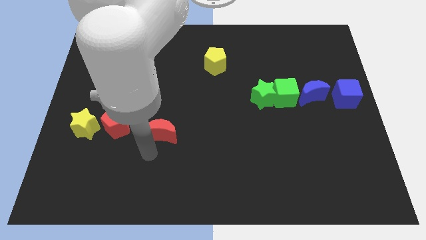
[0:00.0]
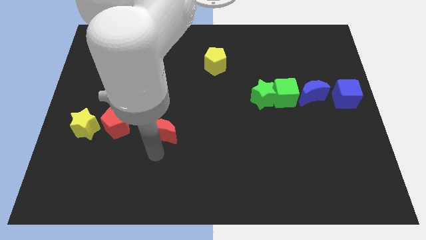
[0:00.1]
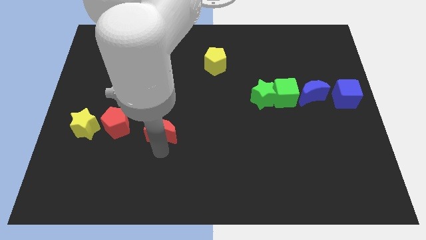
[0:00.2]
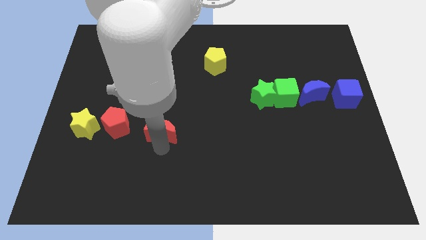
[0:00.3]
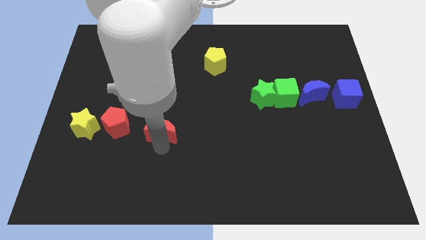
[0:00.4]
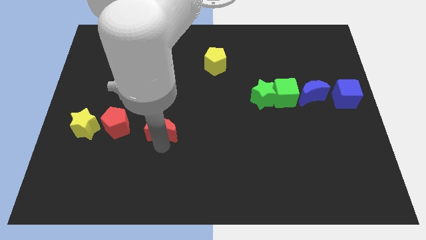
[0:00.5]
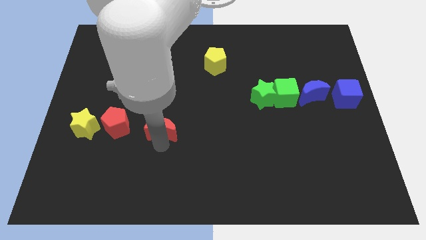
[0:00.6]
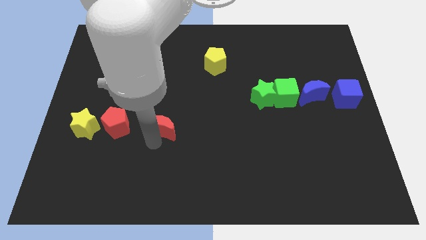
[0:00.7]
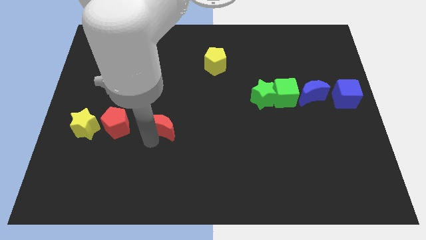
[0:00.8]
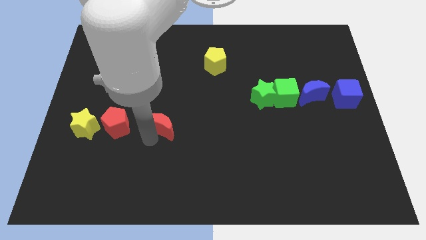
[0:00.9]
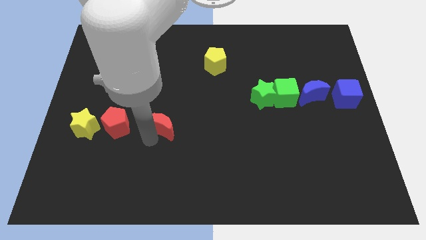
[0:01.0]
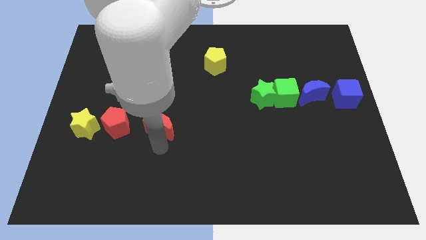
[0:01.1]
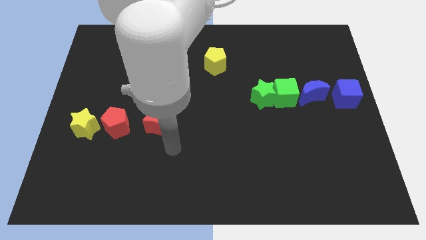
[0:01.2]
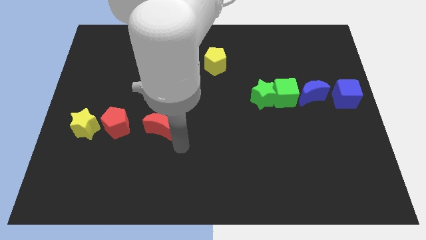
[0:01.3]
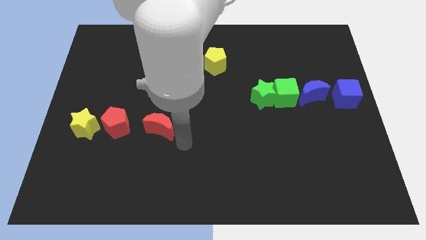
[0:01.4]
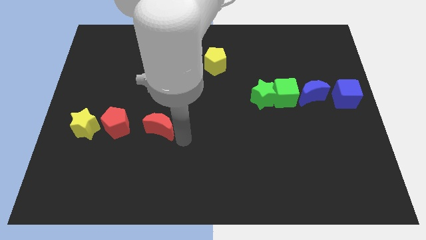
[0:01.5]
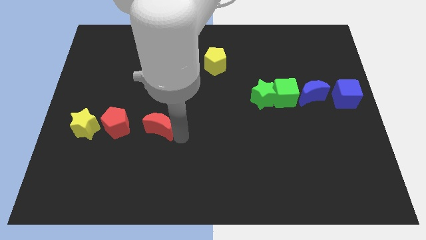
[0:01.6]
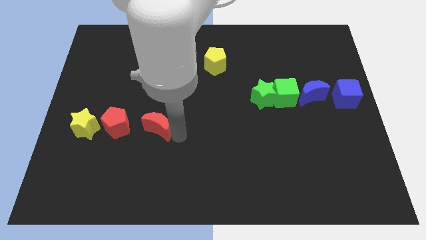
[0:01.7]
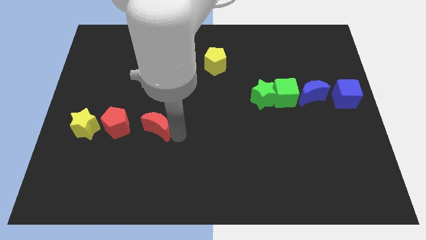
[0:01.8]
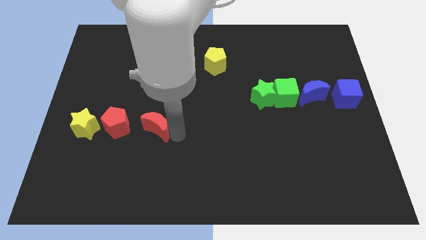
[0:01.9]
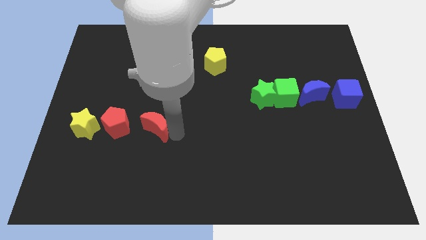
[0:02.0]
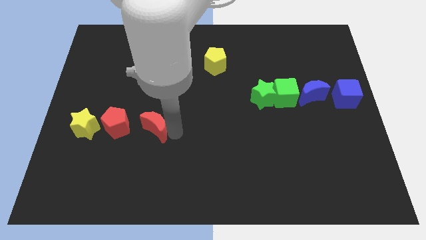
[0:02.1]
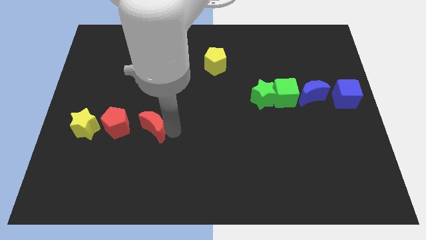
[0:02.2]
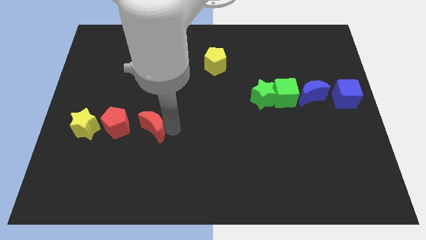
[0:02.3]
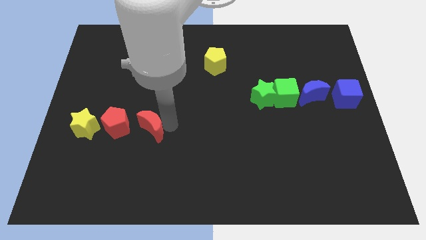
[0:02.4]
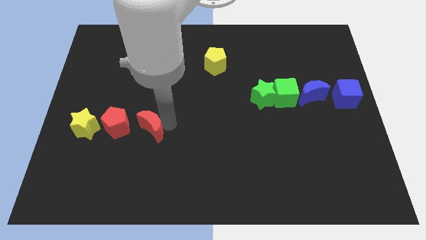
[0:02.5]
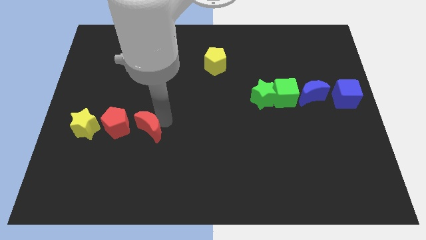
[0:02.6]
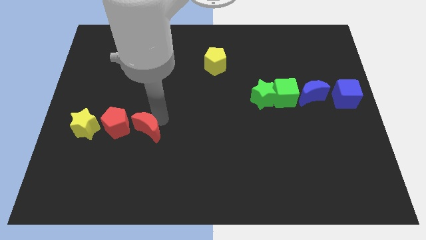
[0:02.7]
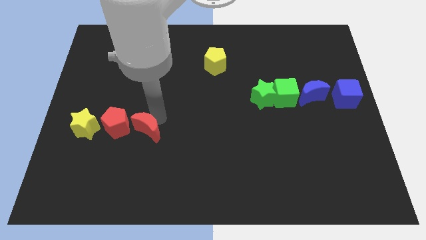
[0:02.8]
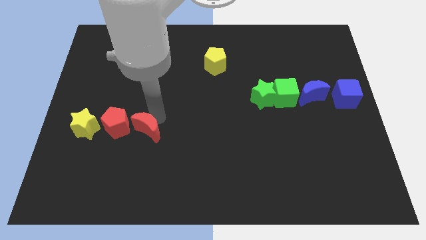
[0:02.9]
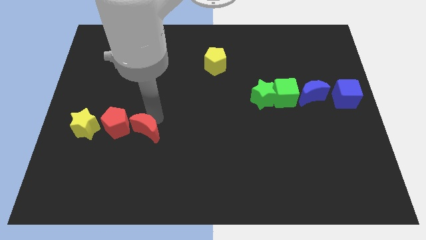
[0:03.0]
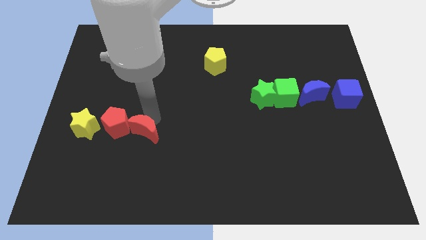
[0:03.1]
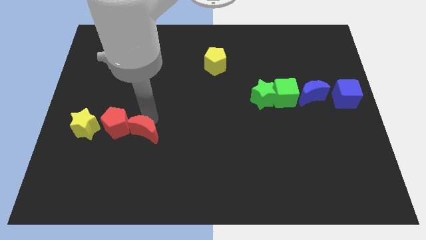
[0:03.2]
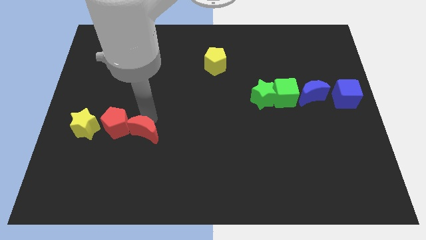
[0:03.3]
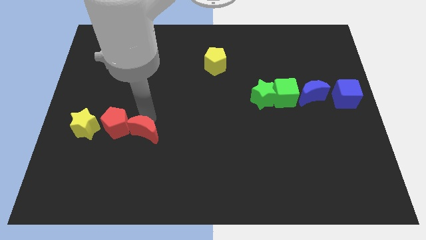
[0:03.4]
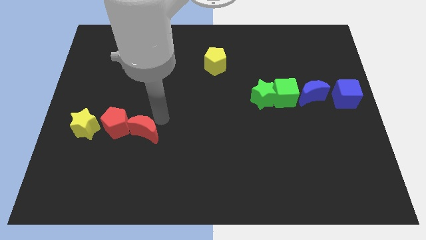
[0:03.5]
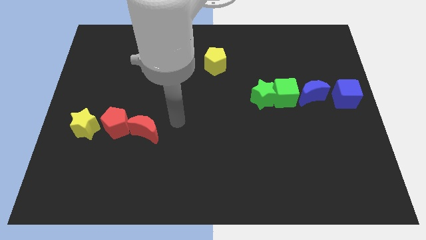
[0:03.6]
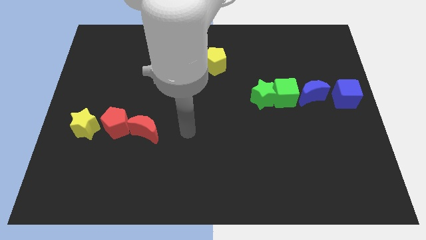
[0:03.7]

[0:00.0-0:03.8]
move red moon right to the red pentagon

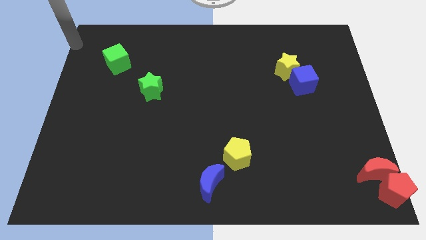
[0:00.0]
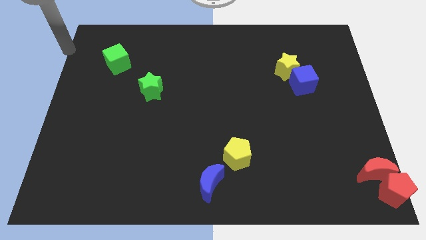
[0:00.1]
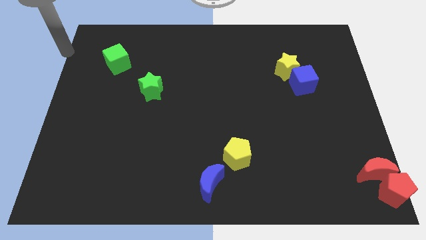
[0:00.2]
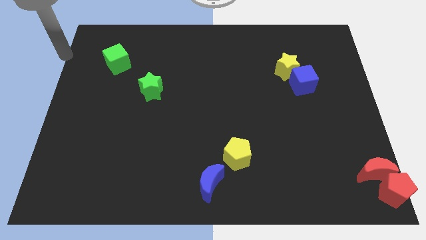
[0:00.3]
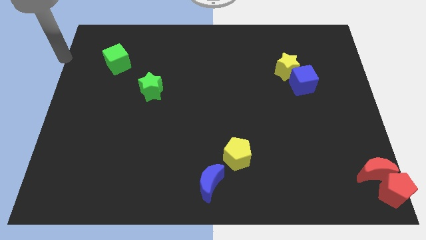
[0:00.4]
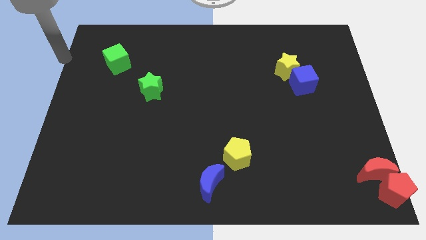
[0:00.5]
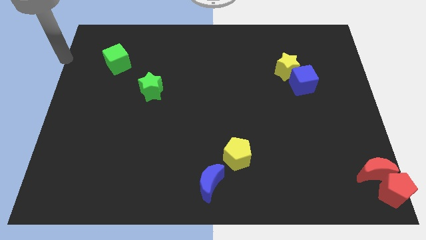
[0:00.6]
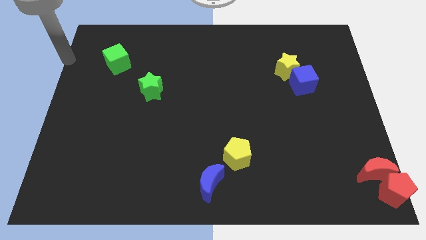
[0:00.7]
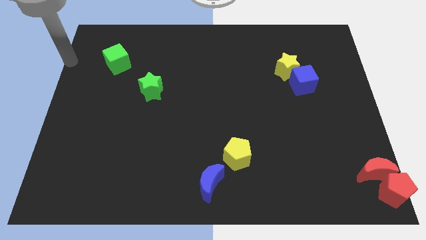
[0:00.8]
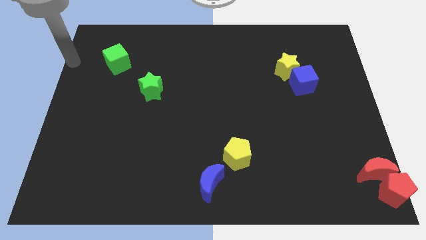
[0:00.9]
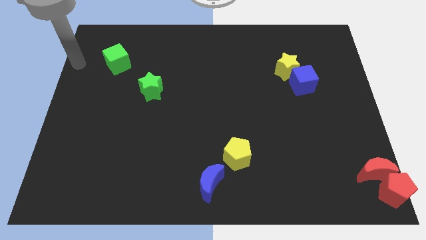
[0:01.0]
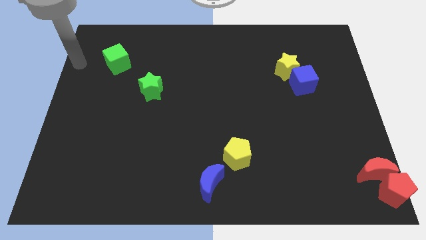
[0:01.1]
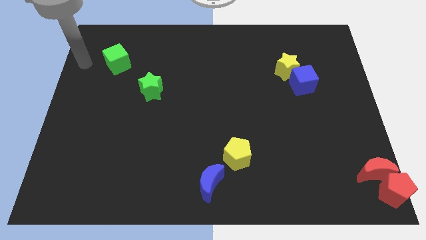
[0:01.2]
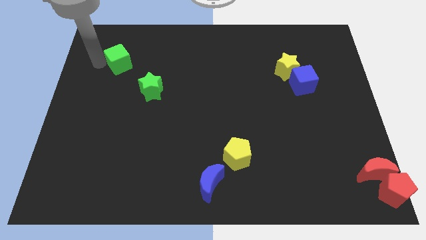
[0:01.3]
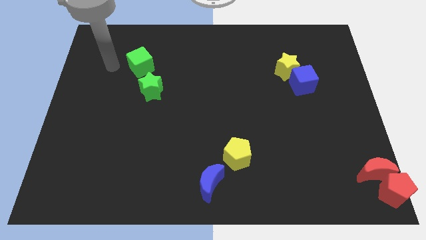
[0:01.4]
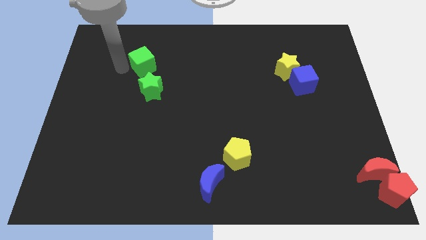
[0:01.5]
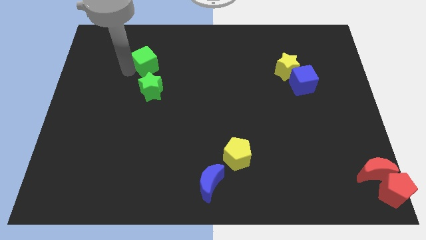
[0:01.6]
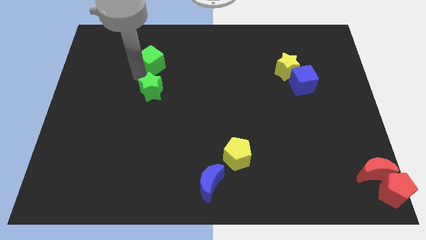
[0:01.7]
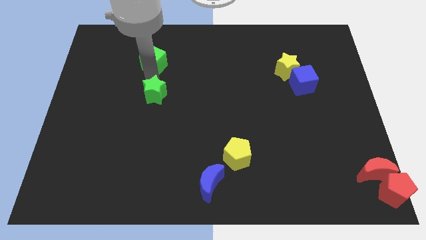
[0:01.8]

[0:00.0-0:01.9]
push green cube above green star

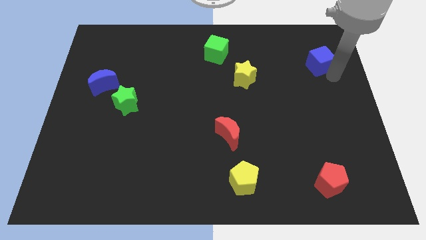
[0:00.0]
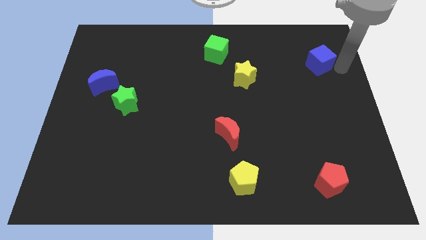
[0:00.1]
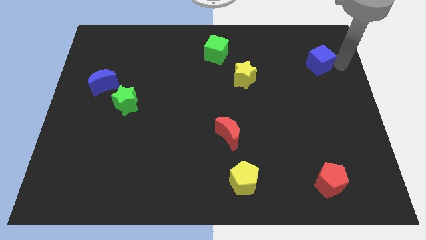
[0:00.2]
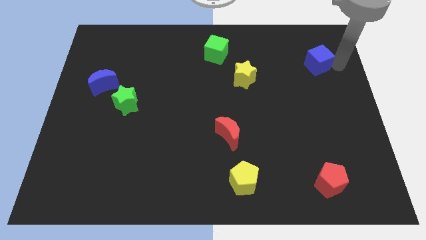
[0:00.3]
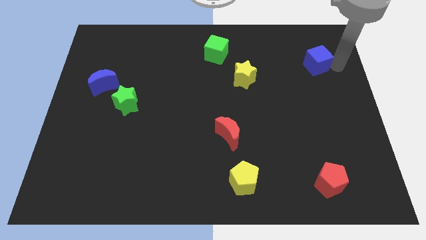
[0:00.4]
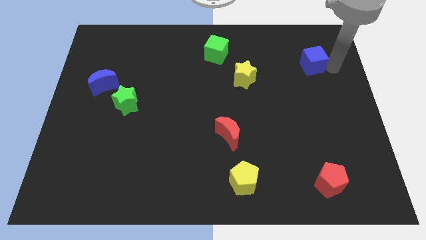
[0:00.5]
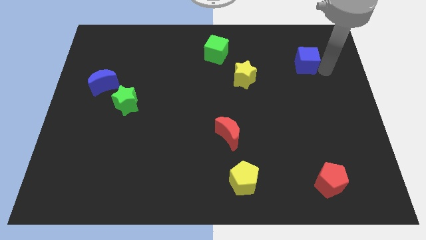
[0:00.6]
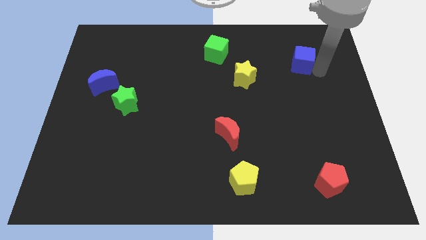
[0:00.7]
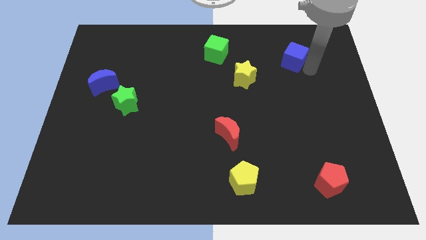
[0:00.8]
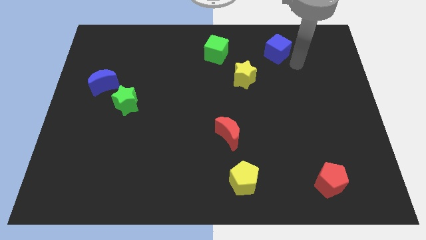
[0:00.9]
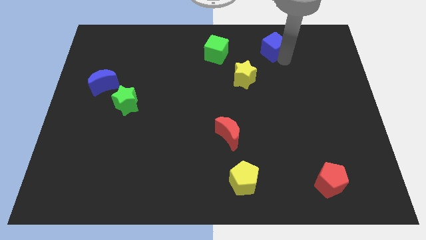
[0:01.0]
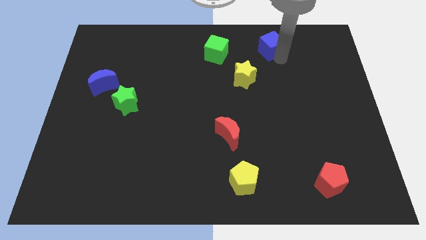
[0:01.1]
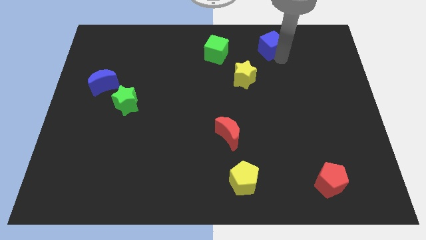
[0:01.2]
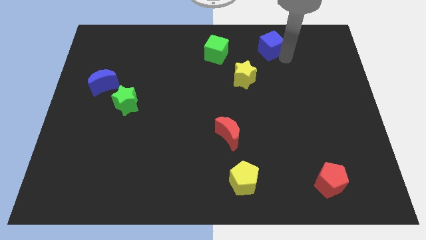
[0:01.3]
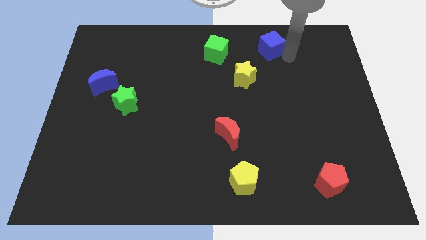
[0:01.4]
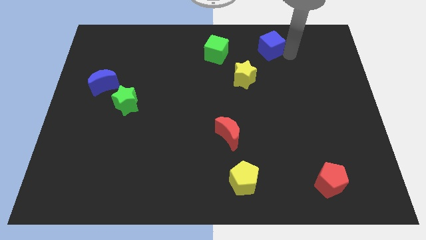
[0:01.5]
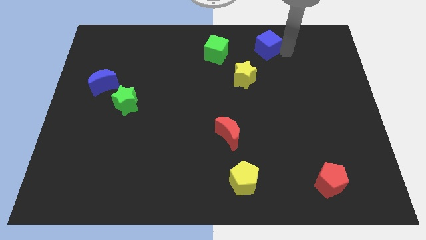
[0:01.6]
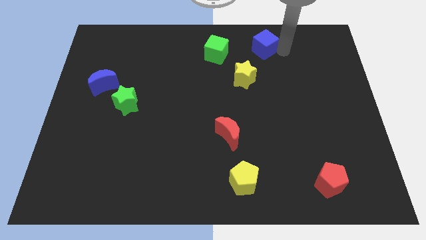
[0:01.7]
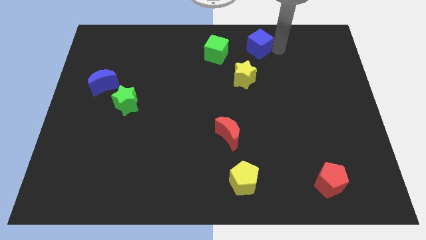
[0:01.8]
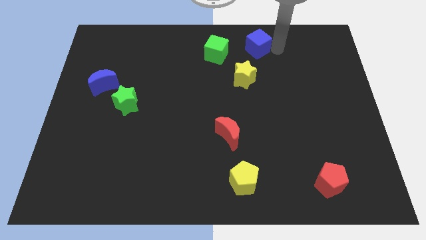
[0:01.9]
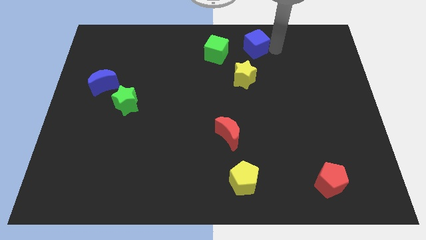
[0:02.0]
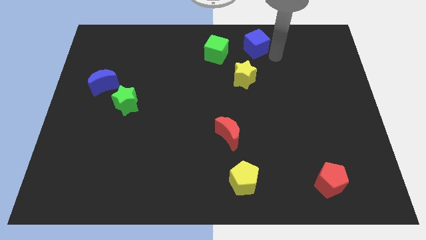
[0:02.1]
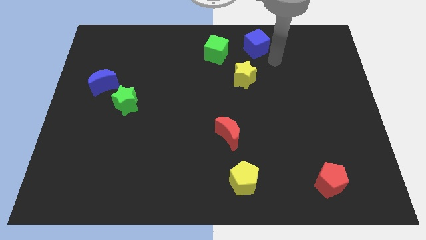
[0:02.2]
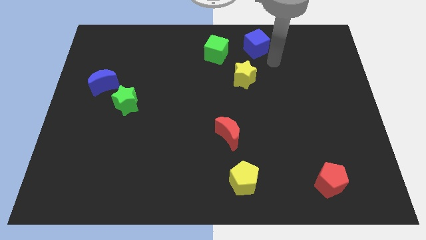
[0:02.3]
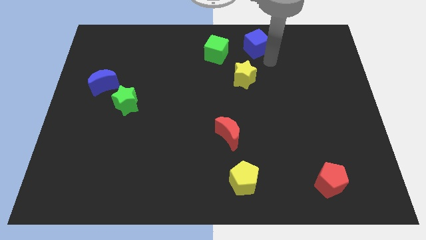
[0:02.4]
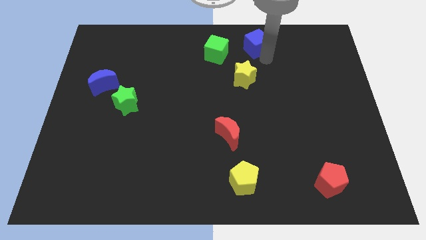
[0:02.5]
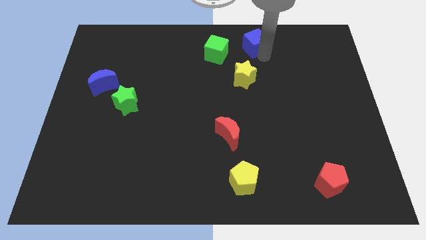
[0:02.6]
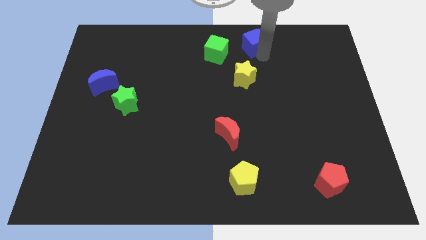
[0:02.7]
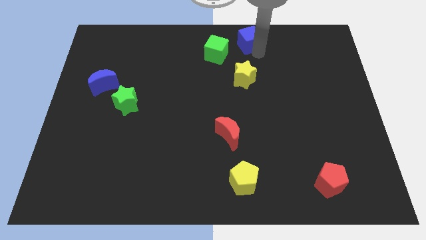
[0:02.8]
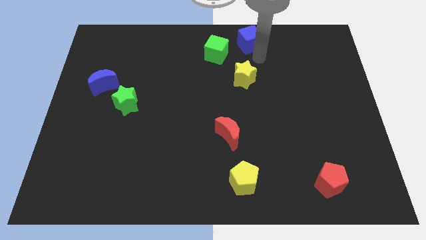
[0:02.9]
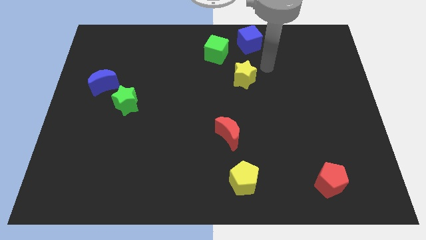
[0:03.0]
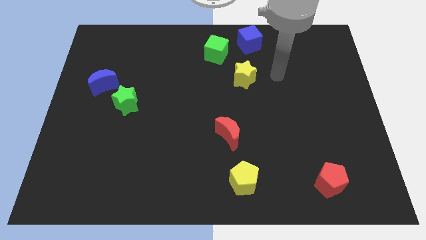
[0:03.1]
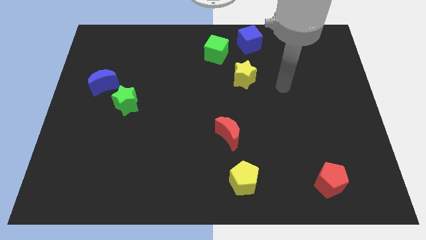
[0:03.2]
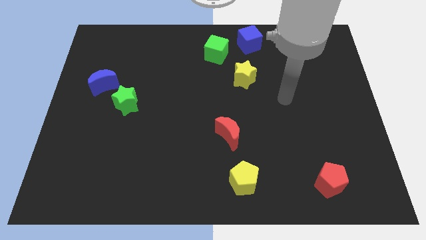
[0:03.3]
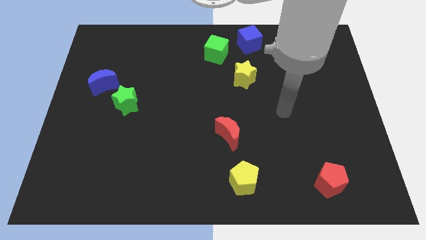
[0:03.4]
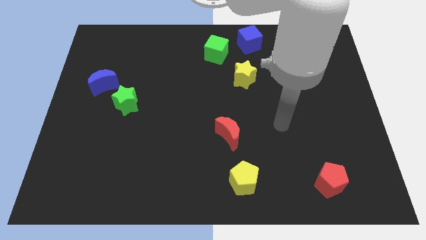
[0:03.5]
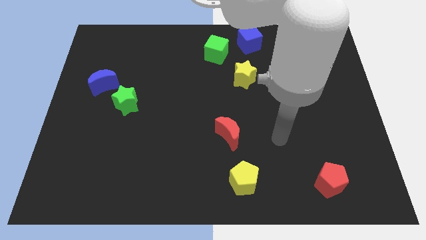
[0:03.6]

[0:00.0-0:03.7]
place the blue cube above the yellow star
